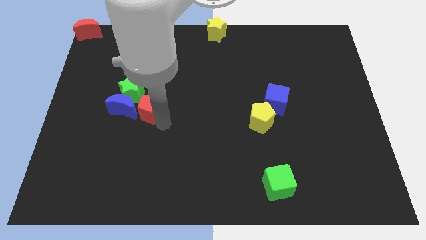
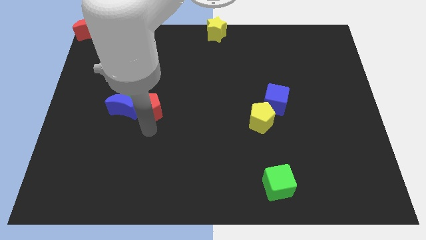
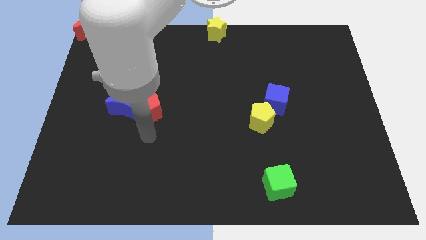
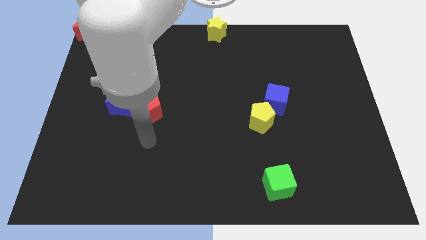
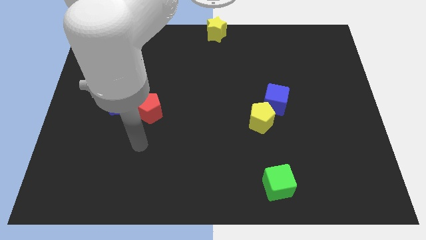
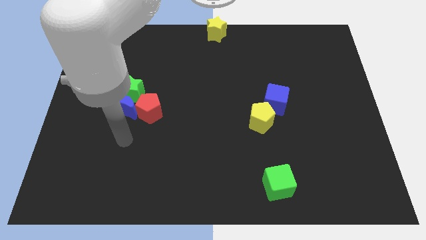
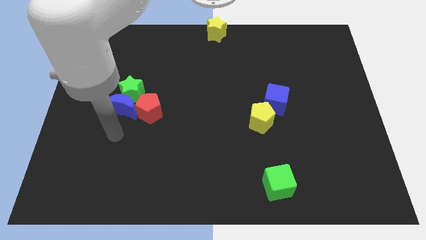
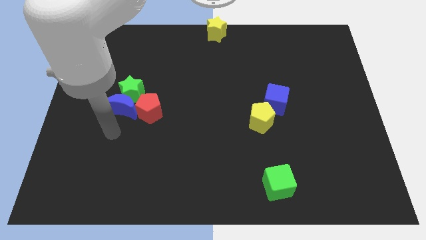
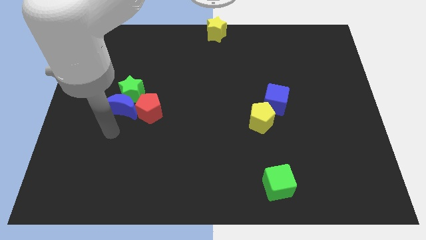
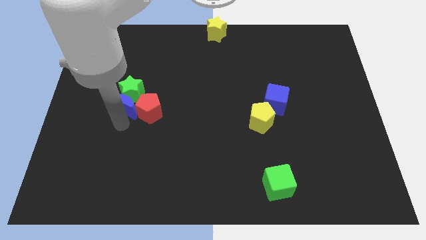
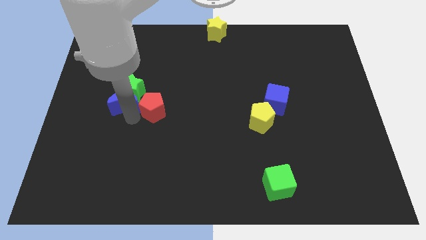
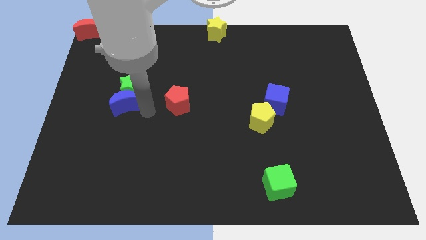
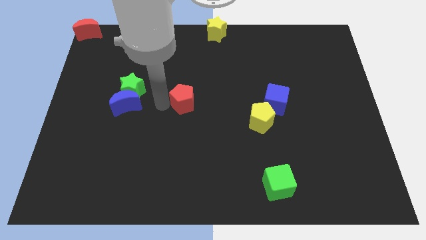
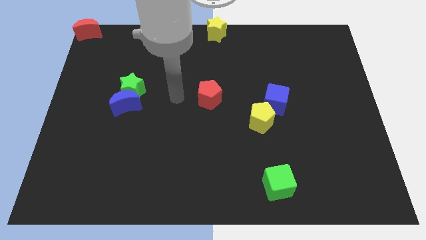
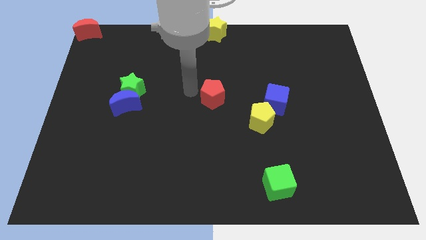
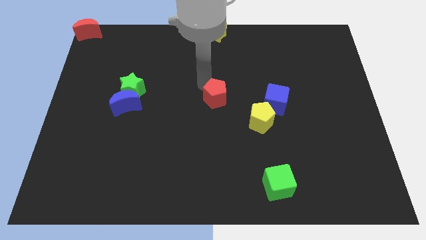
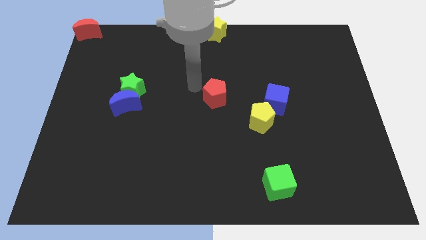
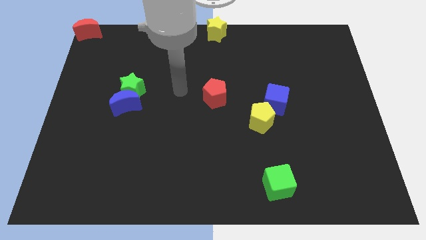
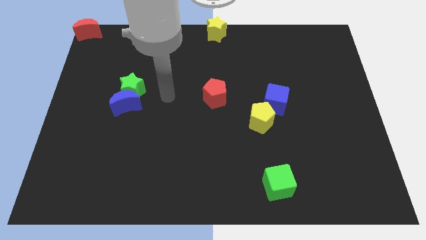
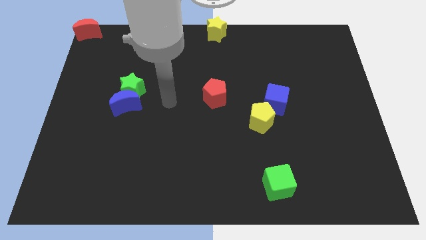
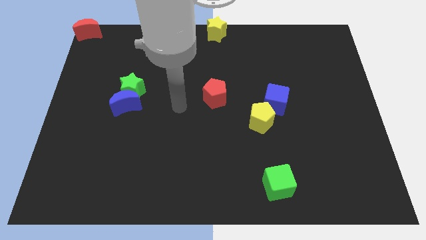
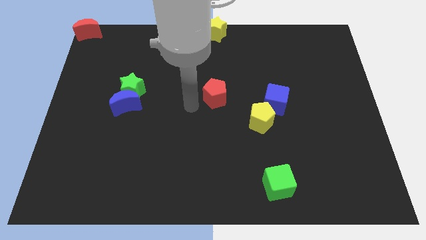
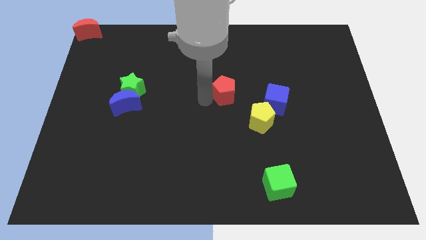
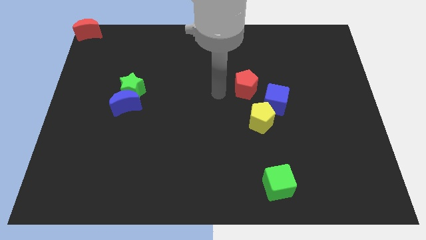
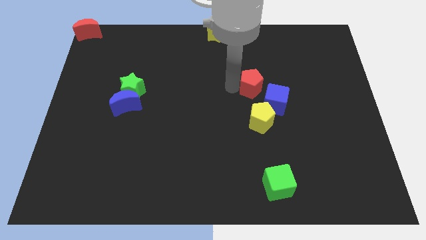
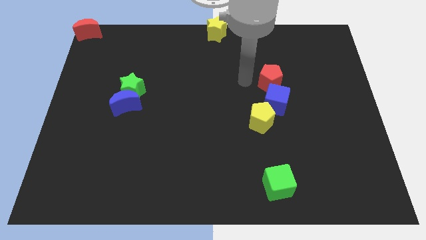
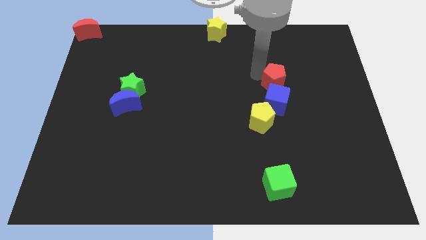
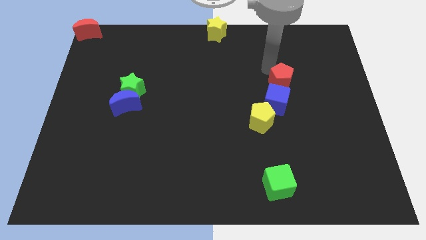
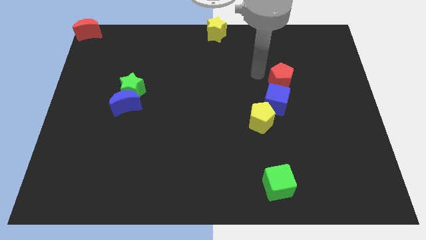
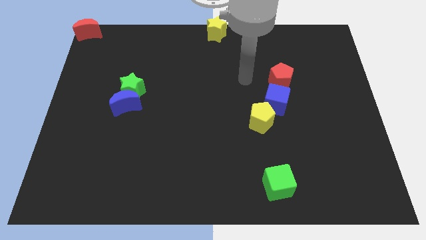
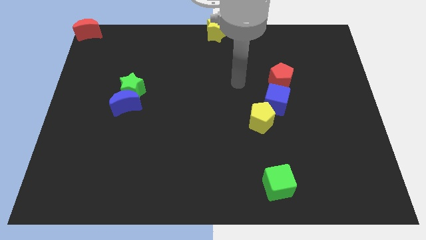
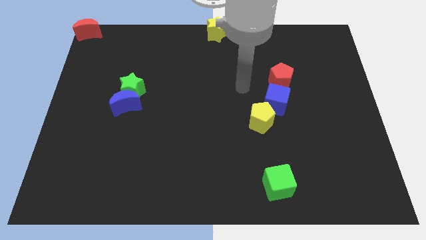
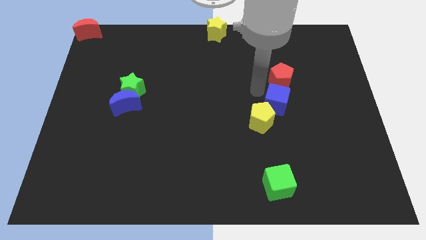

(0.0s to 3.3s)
move the red pentagon to the top of the blue cube

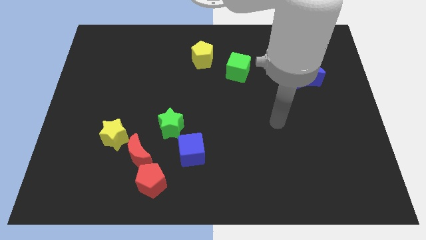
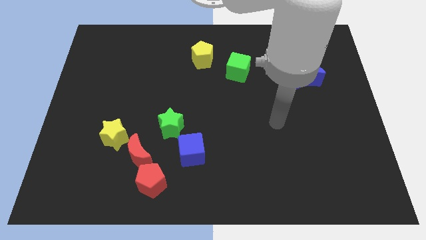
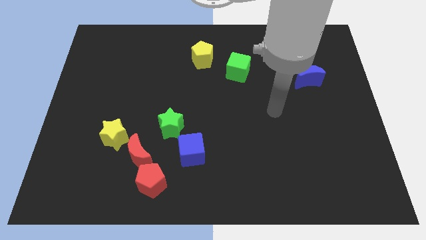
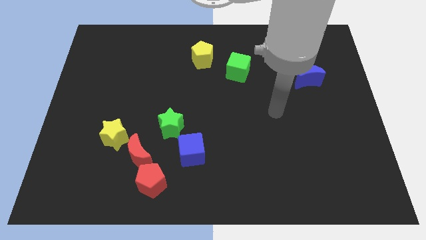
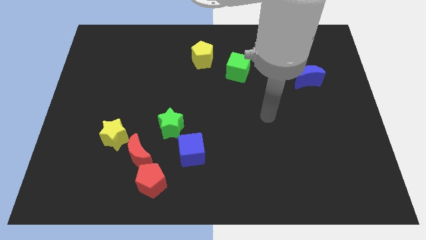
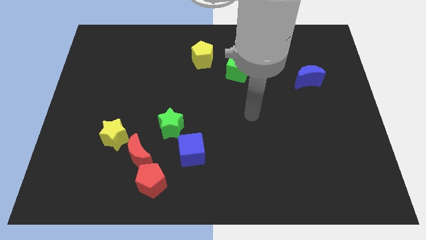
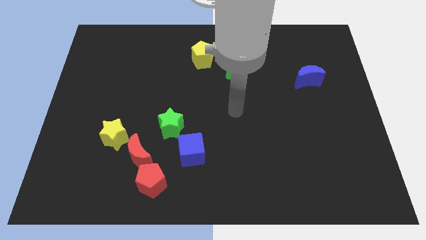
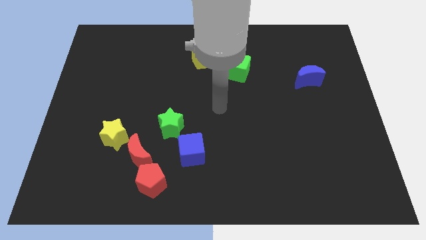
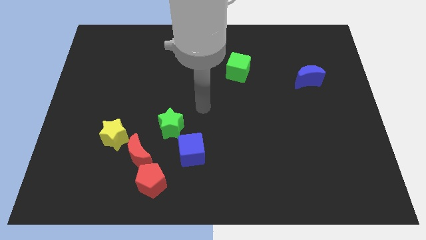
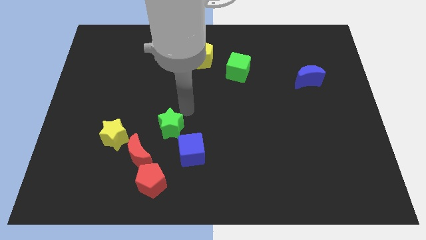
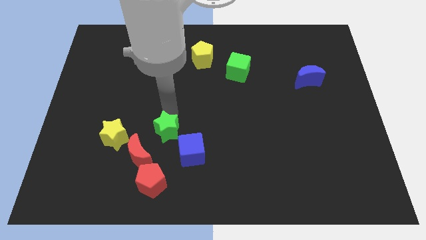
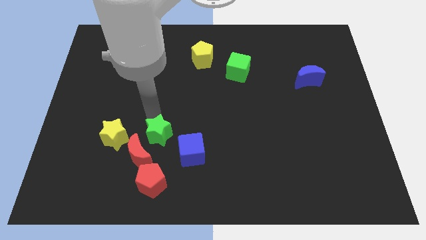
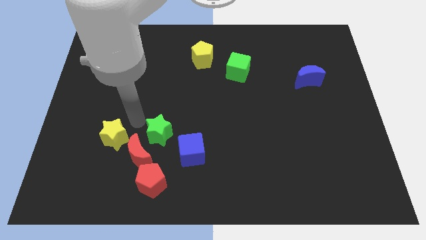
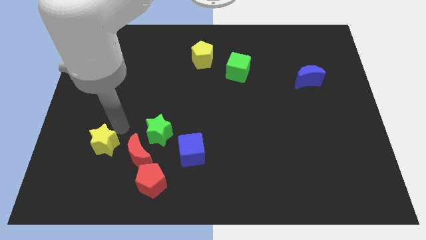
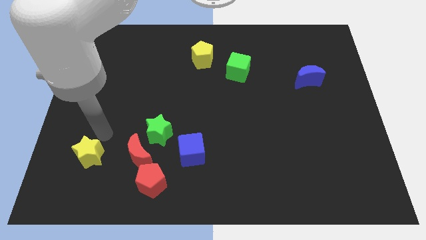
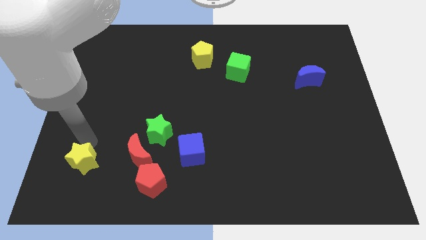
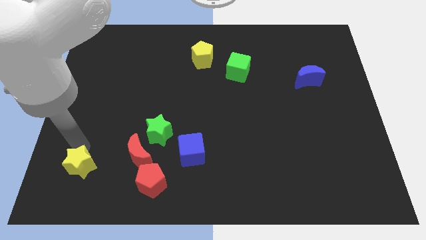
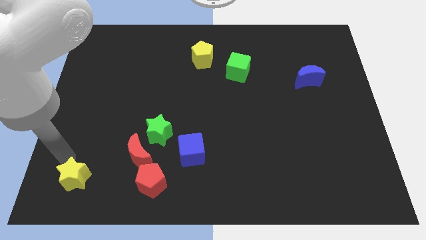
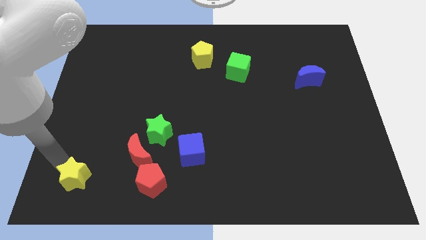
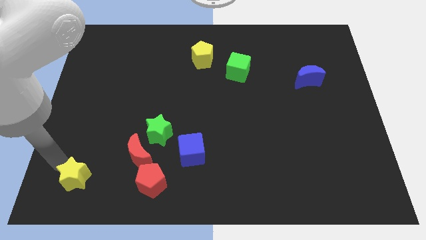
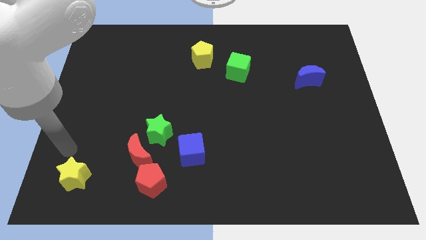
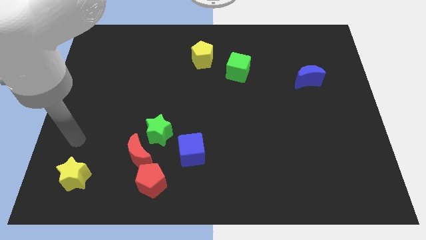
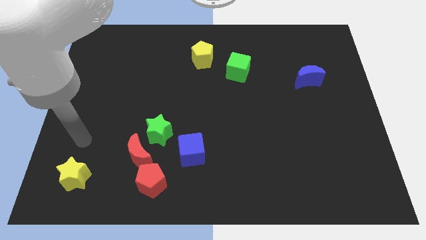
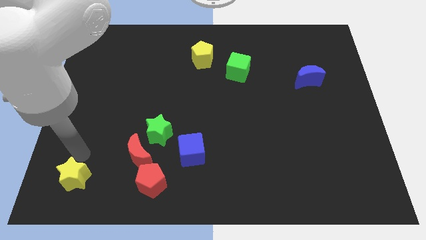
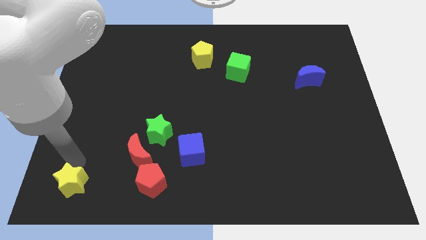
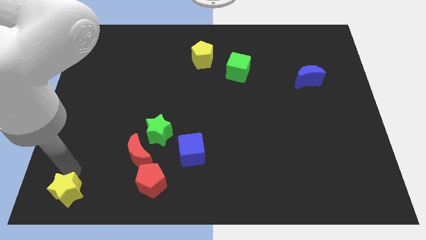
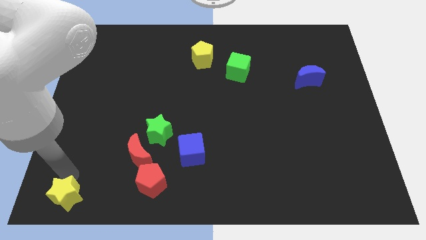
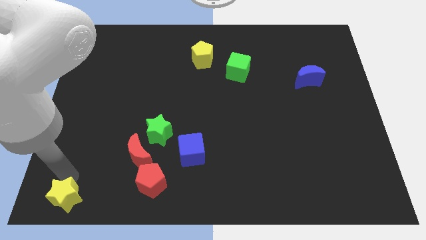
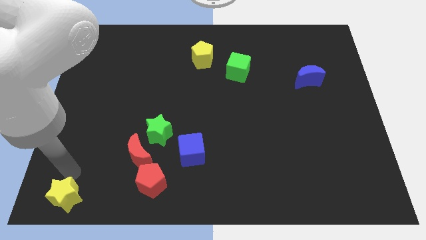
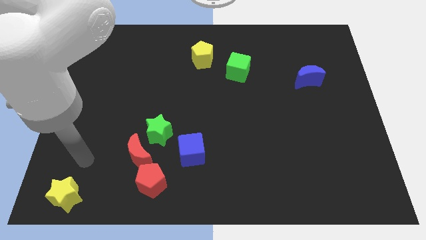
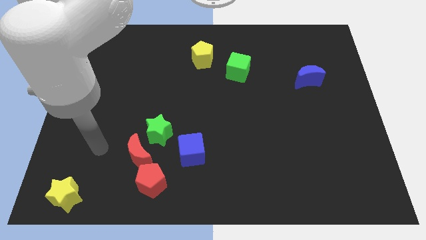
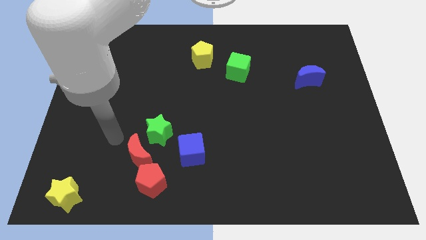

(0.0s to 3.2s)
move the yellow star away from the red moon

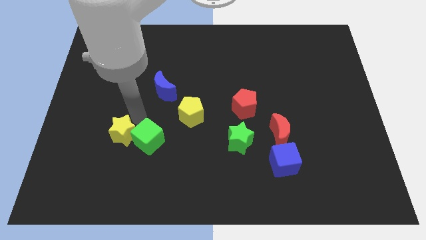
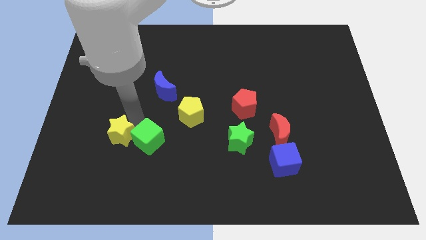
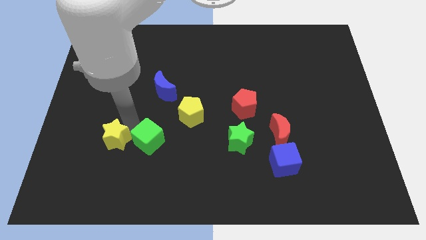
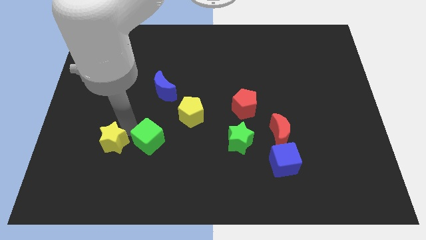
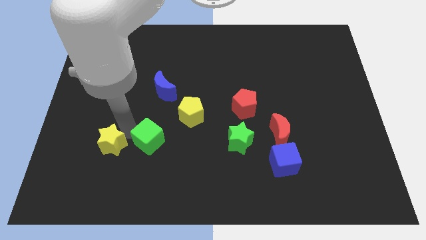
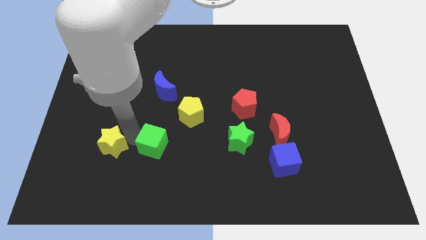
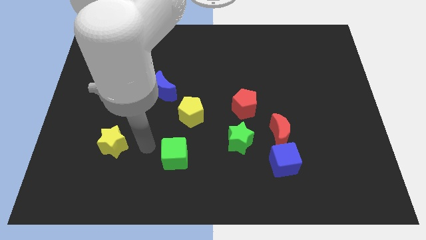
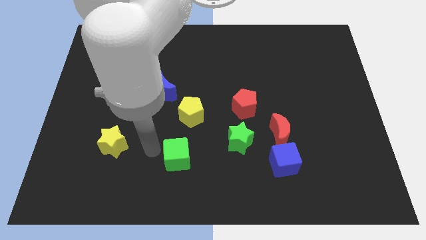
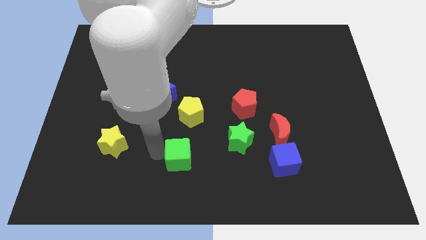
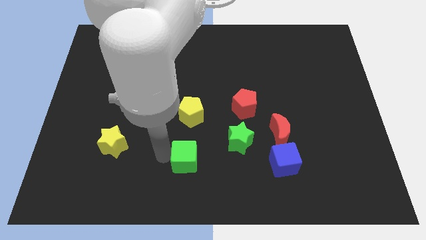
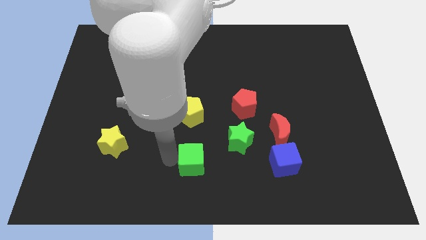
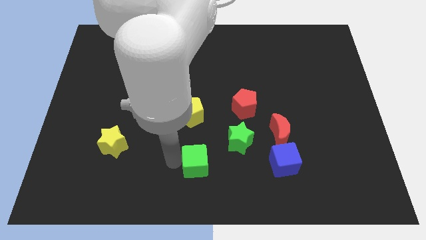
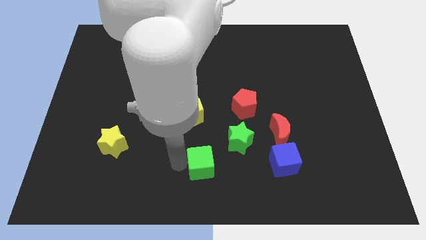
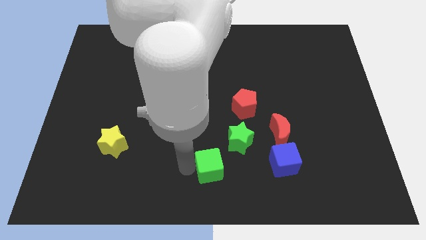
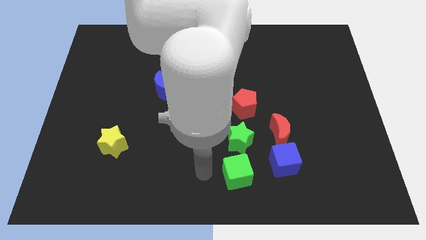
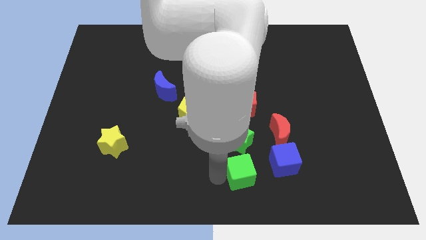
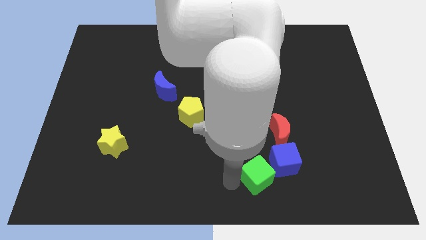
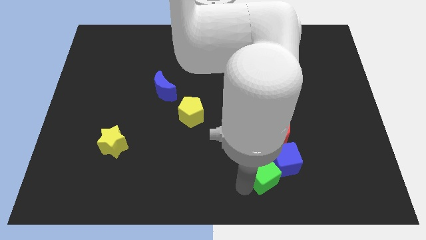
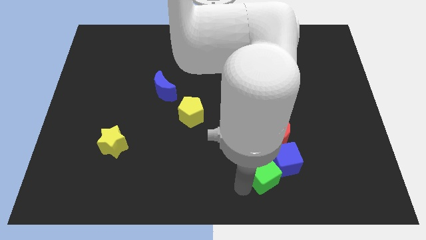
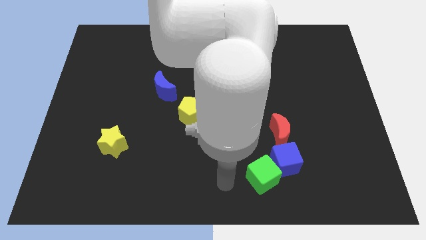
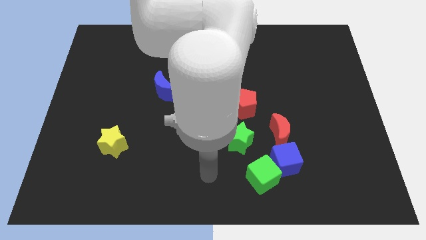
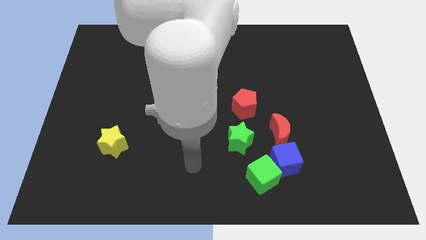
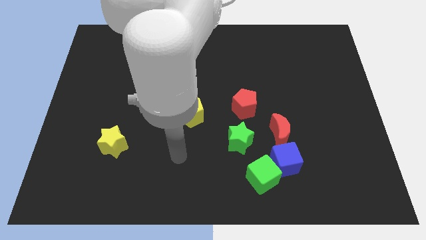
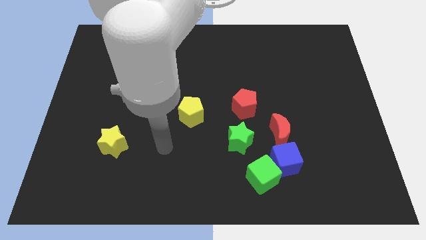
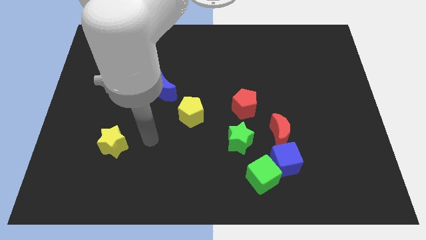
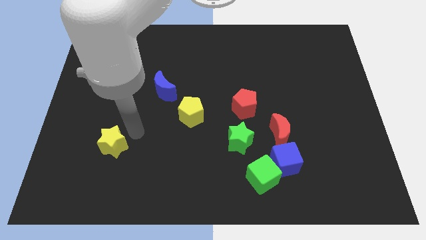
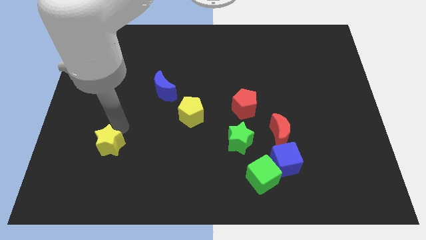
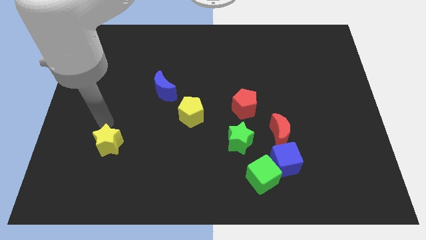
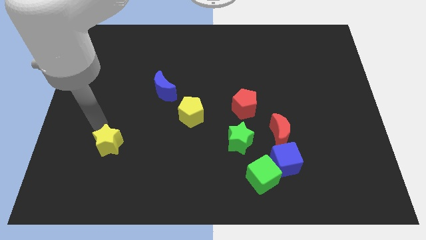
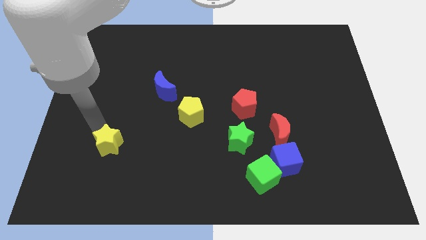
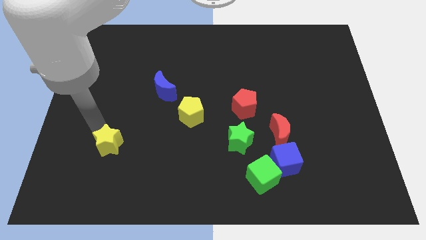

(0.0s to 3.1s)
slightly touch the yellow star
